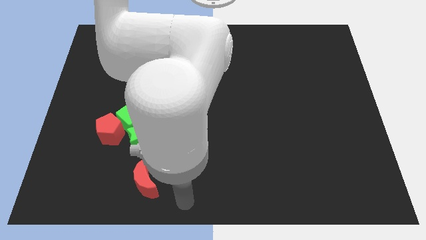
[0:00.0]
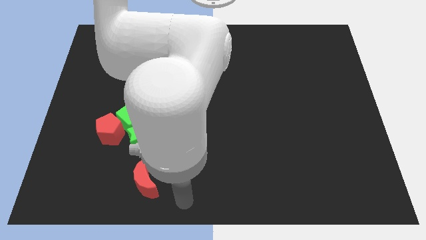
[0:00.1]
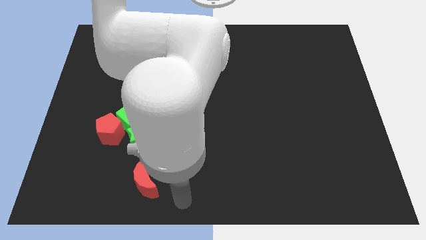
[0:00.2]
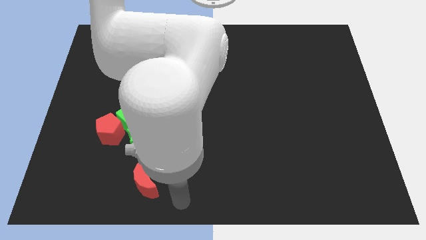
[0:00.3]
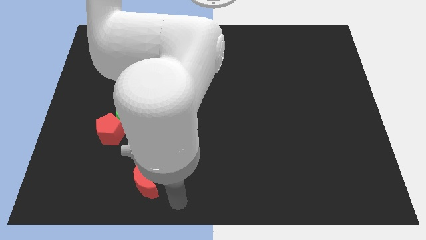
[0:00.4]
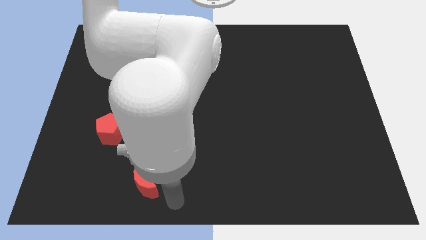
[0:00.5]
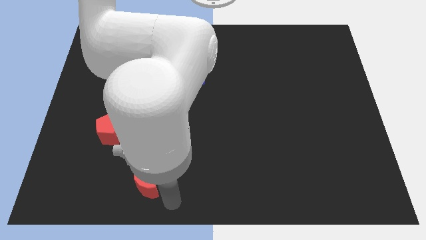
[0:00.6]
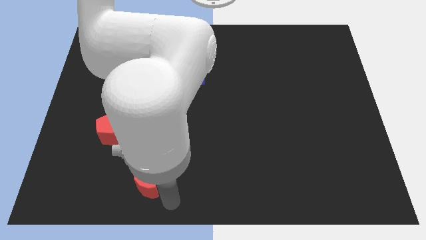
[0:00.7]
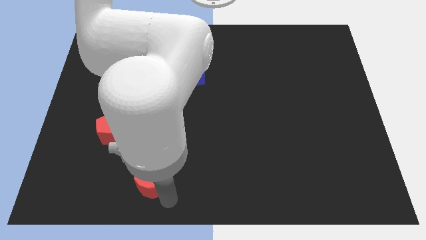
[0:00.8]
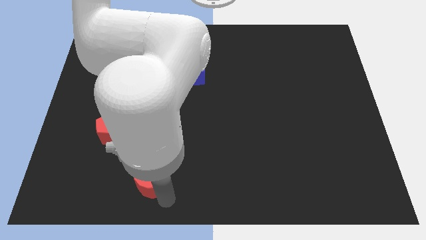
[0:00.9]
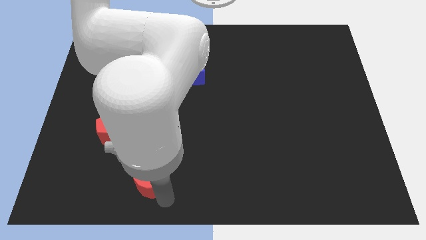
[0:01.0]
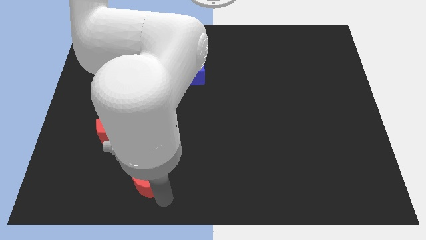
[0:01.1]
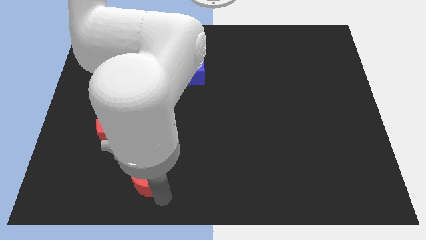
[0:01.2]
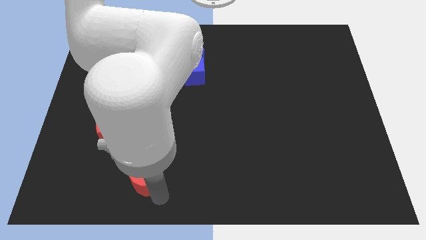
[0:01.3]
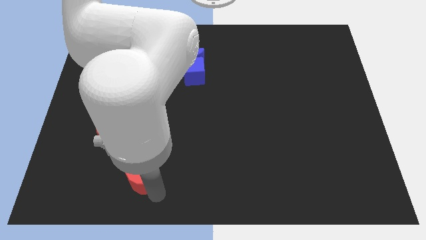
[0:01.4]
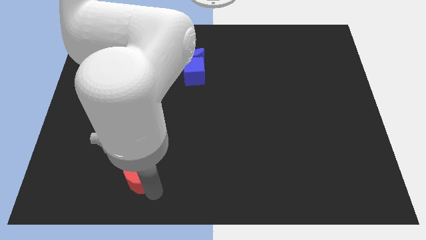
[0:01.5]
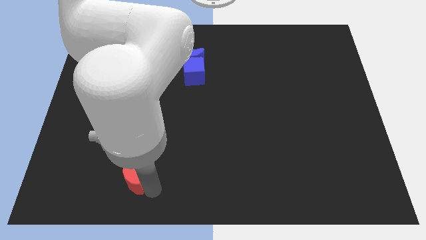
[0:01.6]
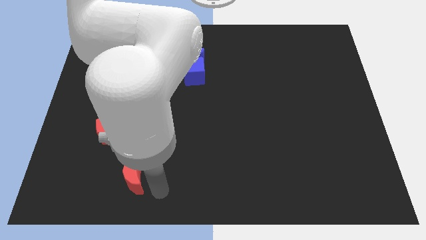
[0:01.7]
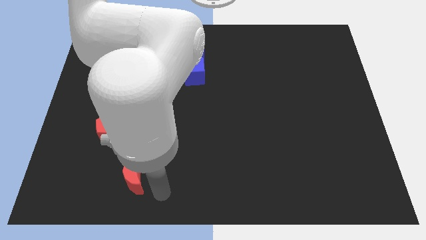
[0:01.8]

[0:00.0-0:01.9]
slightly push the red crescent slightly to the left of the board

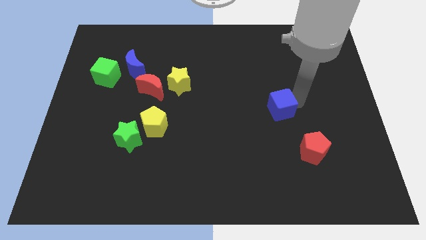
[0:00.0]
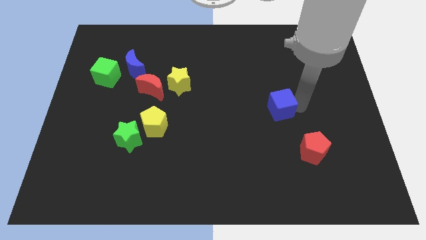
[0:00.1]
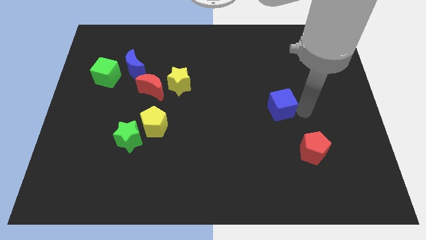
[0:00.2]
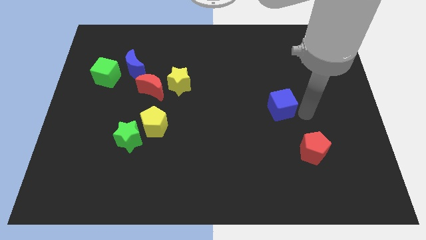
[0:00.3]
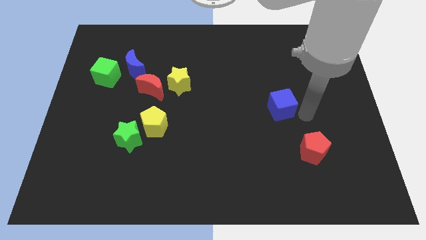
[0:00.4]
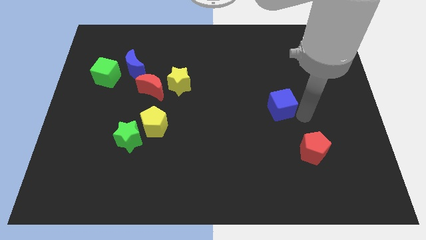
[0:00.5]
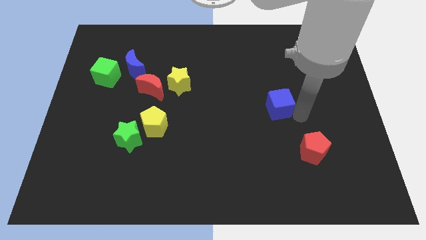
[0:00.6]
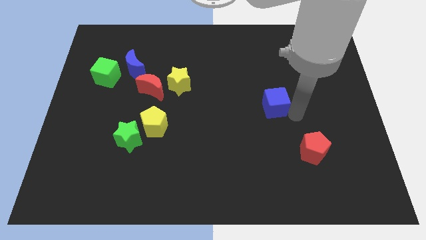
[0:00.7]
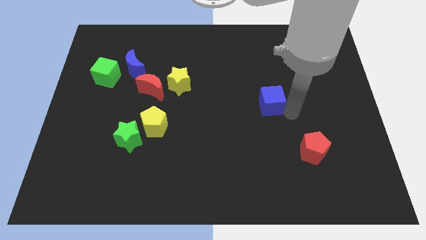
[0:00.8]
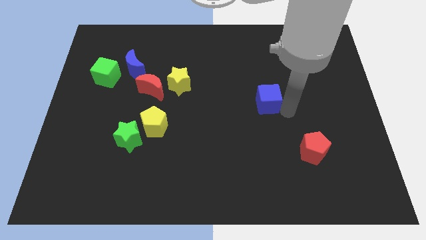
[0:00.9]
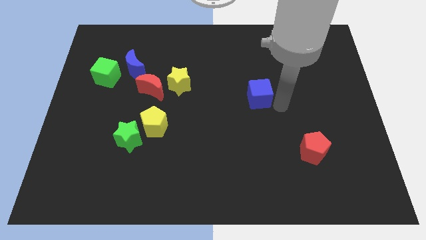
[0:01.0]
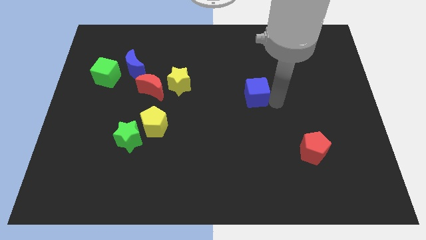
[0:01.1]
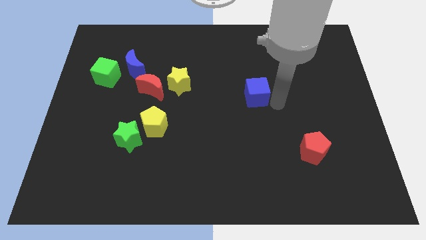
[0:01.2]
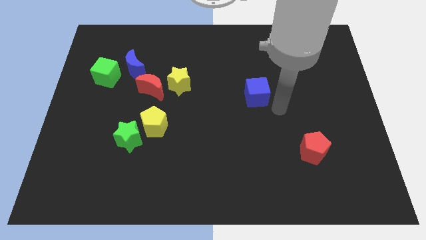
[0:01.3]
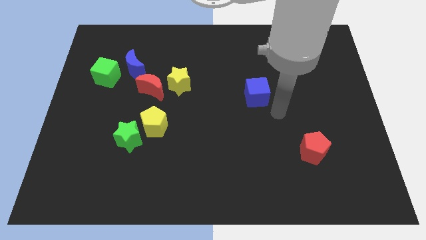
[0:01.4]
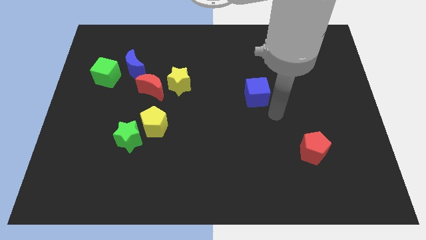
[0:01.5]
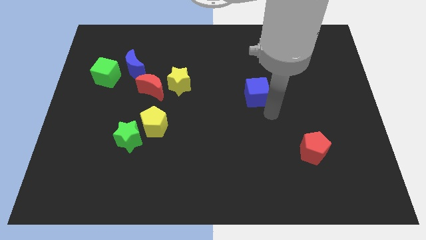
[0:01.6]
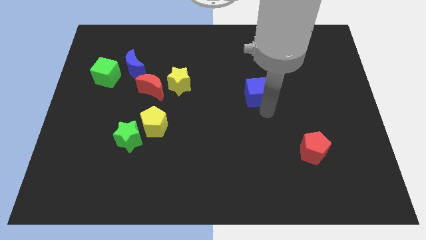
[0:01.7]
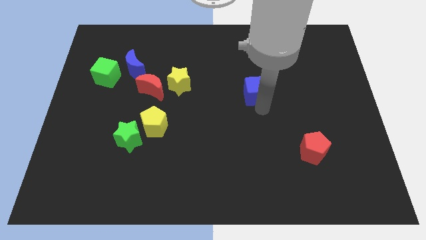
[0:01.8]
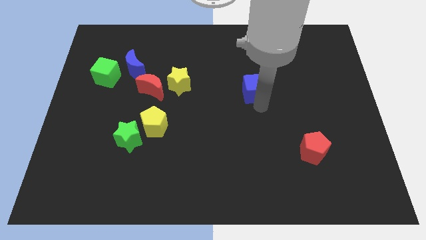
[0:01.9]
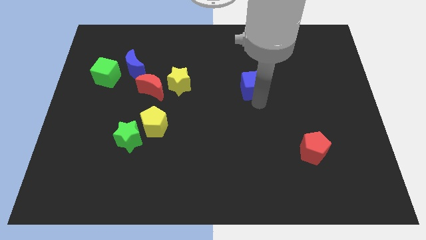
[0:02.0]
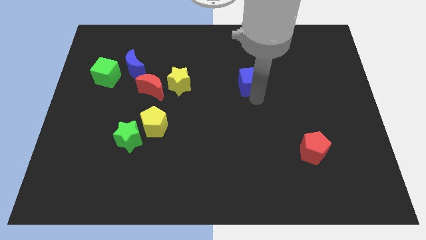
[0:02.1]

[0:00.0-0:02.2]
put the blue cube parallel to yellow star

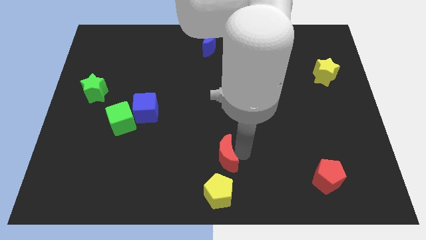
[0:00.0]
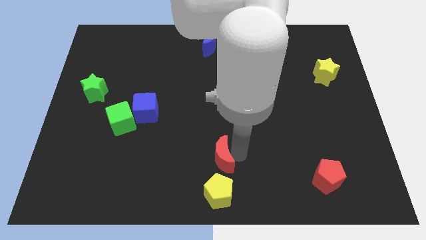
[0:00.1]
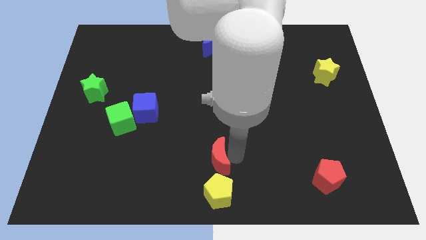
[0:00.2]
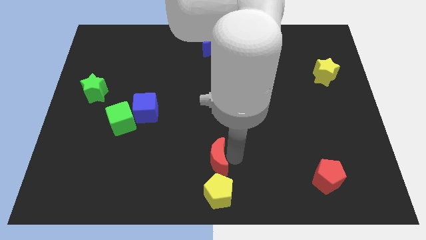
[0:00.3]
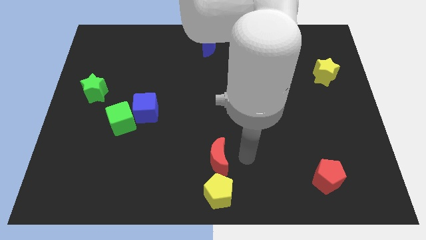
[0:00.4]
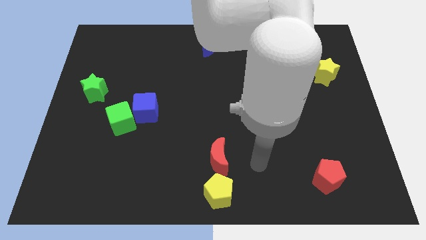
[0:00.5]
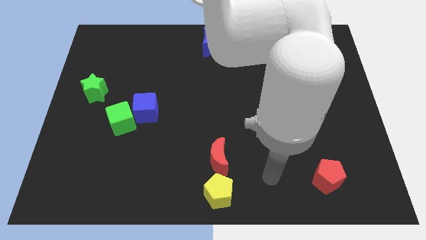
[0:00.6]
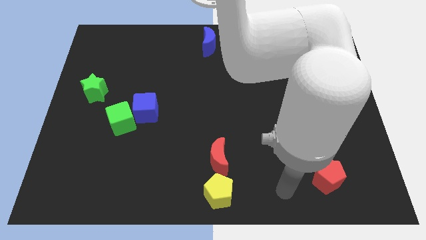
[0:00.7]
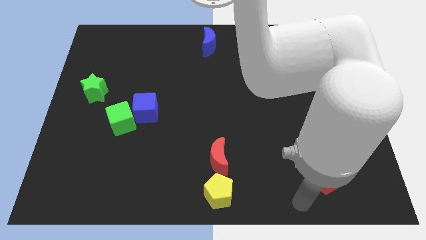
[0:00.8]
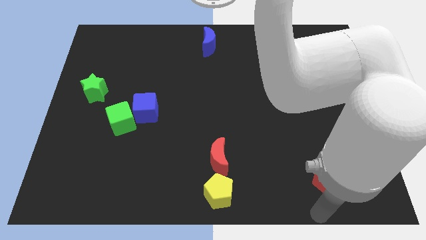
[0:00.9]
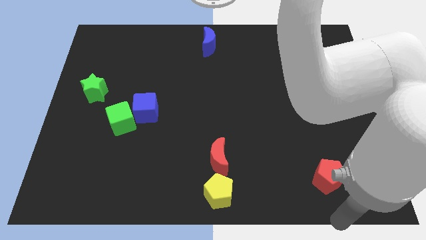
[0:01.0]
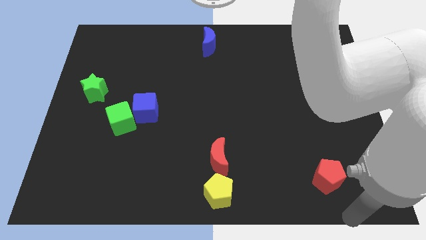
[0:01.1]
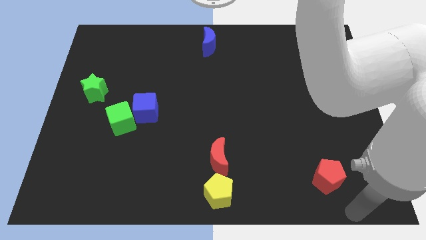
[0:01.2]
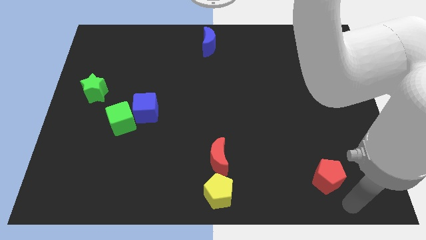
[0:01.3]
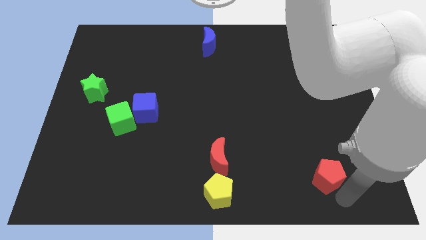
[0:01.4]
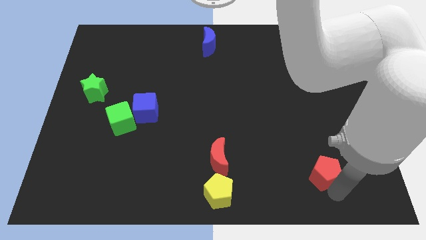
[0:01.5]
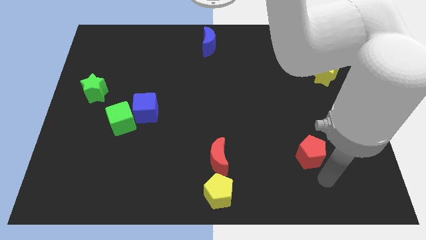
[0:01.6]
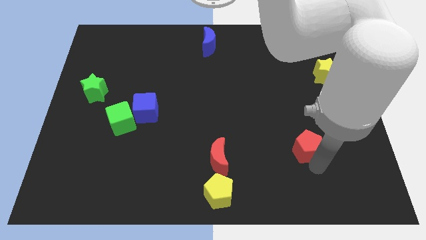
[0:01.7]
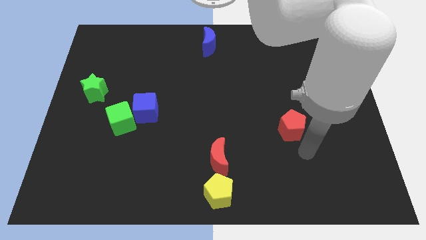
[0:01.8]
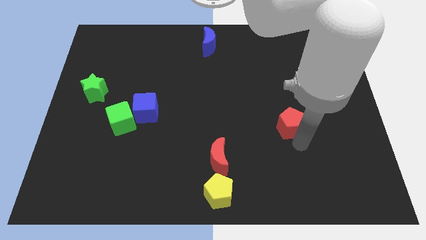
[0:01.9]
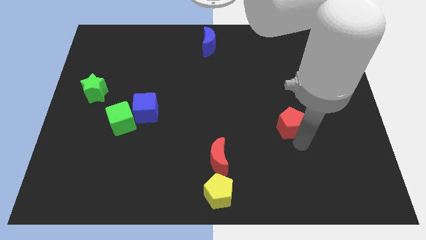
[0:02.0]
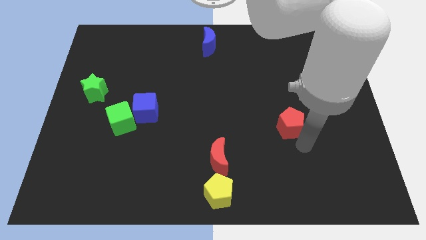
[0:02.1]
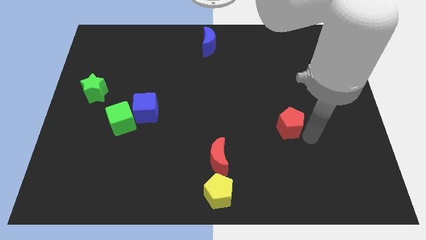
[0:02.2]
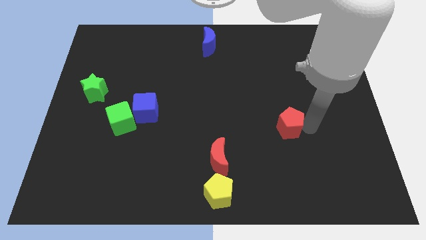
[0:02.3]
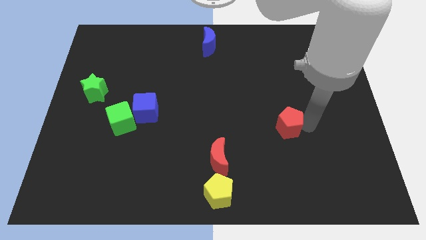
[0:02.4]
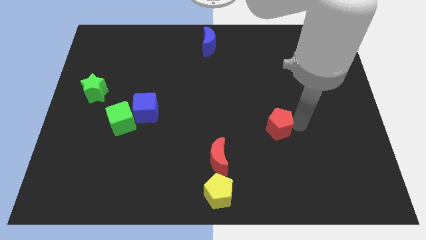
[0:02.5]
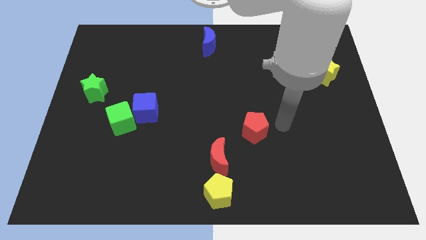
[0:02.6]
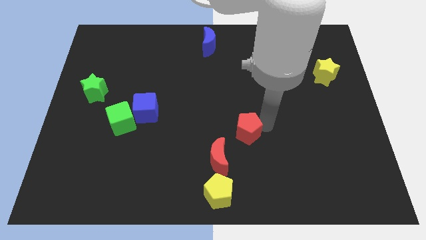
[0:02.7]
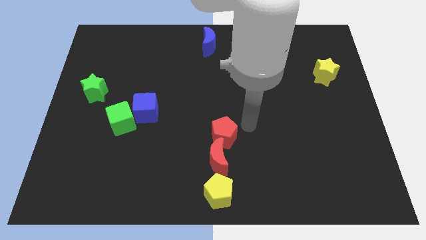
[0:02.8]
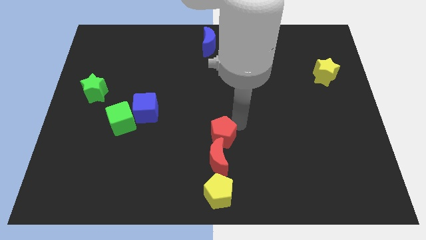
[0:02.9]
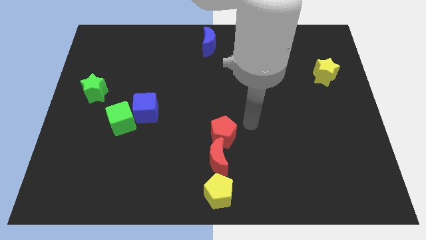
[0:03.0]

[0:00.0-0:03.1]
place red pentagon at the top side of the red moon

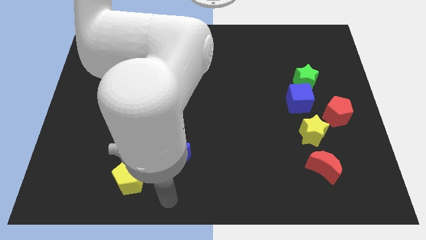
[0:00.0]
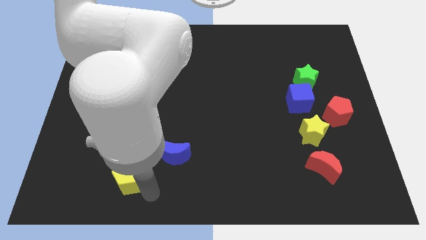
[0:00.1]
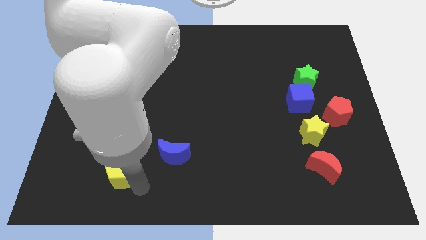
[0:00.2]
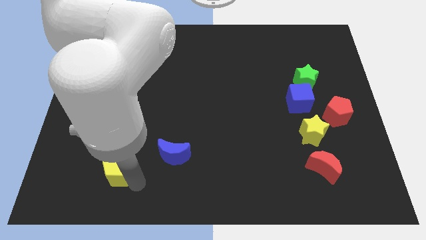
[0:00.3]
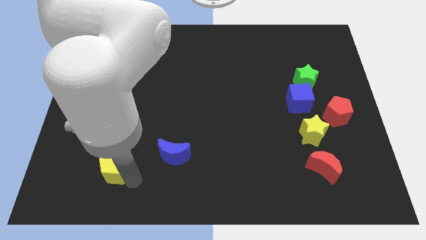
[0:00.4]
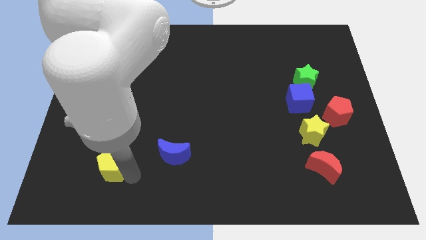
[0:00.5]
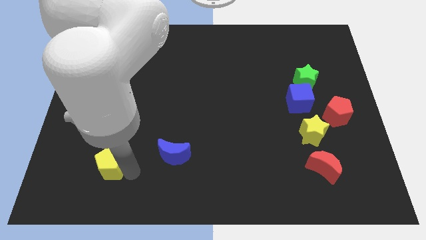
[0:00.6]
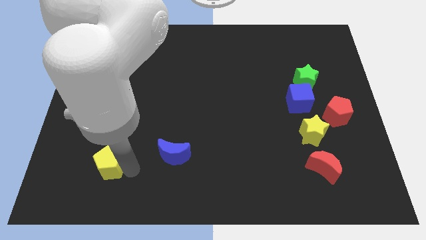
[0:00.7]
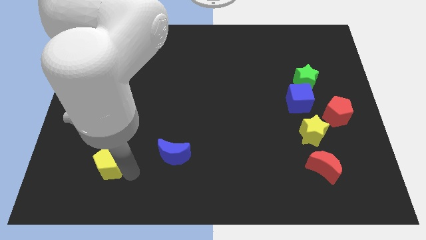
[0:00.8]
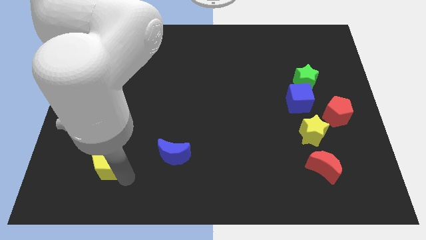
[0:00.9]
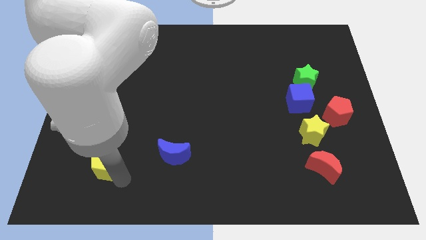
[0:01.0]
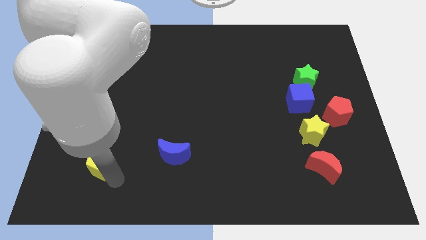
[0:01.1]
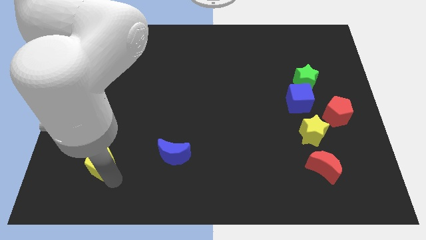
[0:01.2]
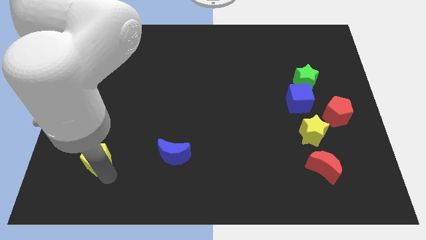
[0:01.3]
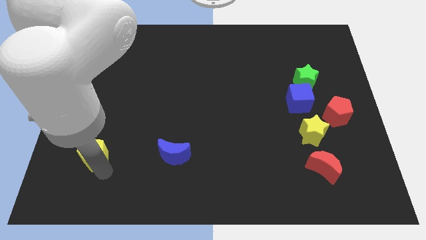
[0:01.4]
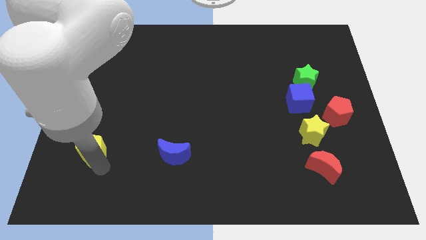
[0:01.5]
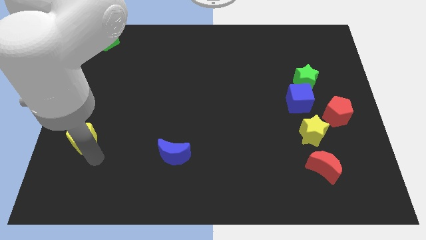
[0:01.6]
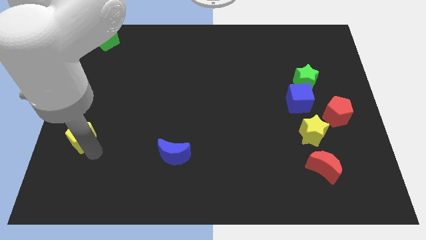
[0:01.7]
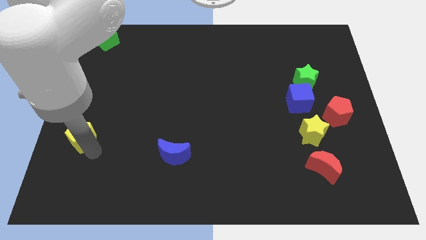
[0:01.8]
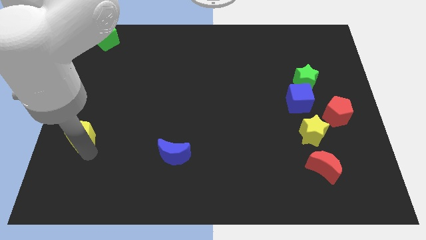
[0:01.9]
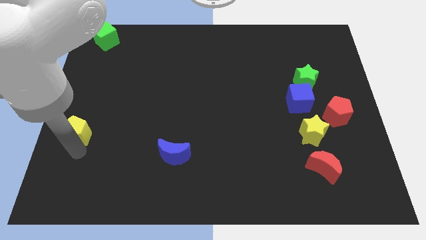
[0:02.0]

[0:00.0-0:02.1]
move the yellow pentagon to the left middle of the board
